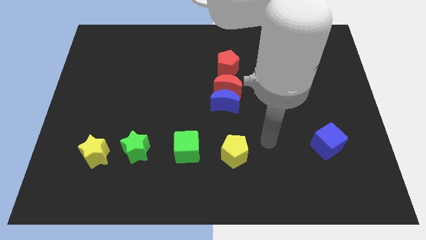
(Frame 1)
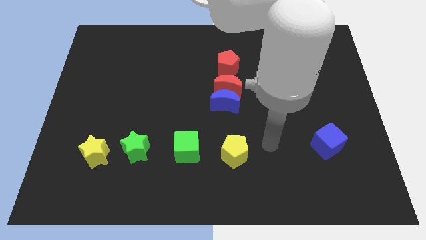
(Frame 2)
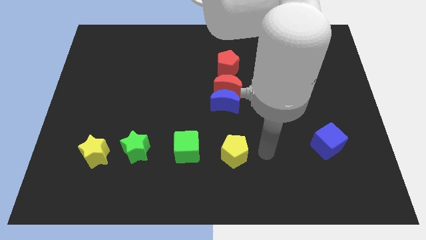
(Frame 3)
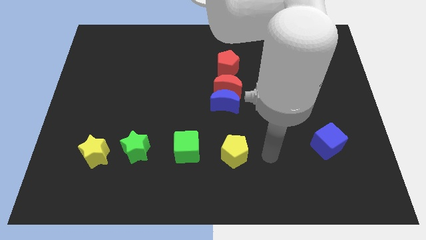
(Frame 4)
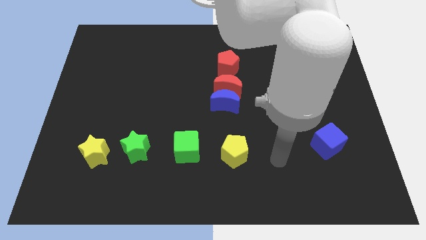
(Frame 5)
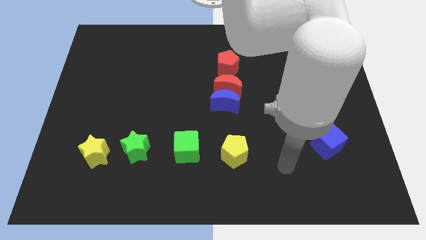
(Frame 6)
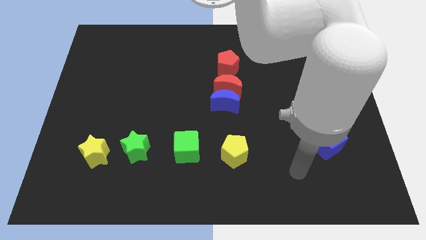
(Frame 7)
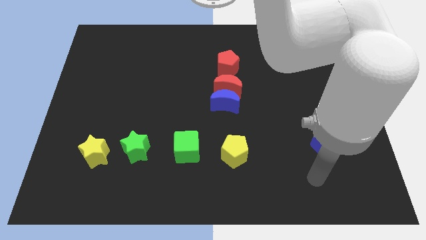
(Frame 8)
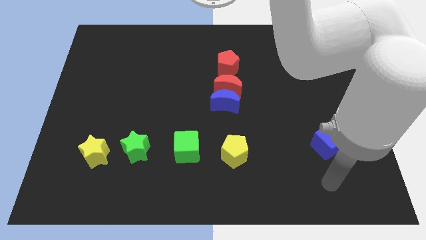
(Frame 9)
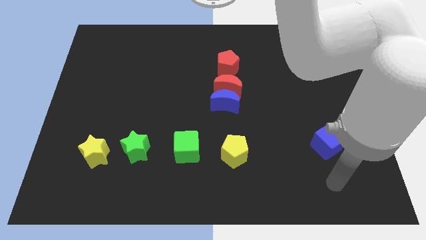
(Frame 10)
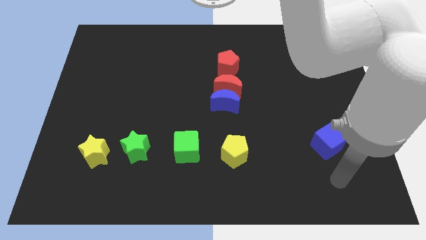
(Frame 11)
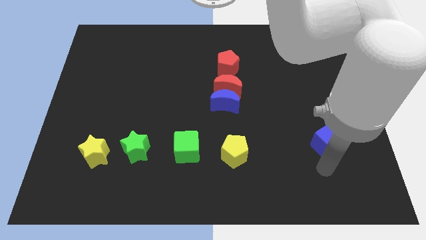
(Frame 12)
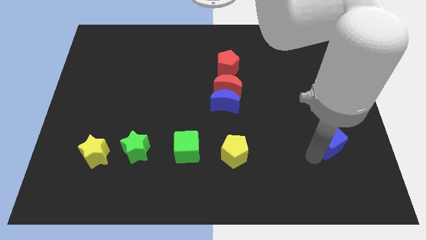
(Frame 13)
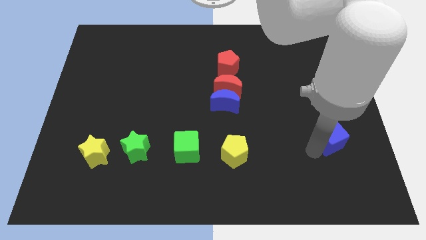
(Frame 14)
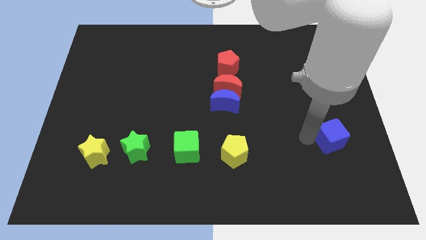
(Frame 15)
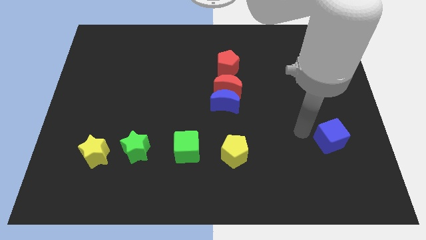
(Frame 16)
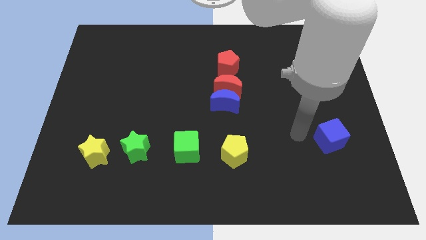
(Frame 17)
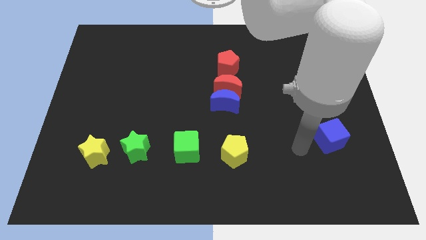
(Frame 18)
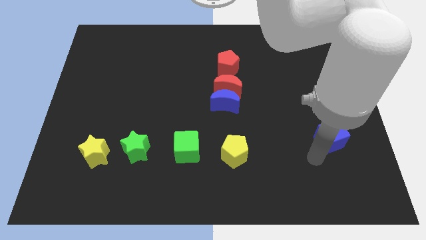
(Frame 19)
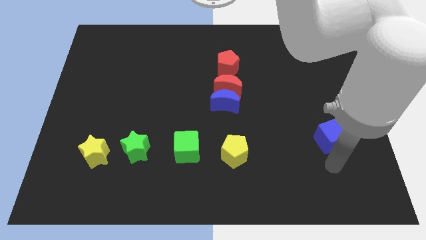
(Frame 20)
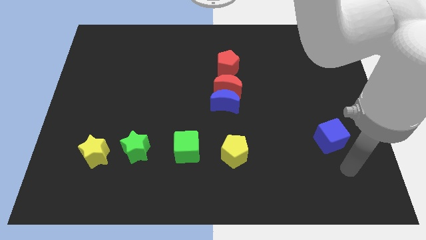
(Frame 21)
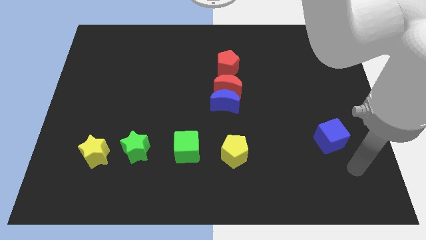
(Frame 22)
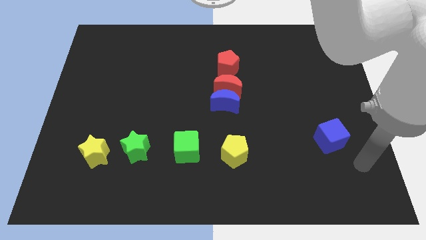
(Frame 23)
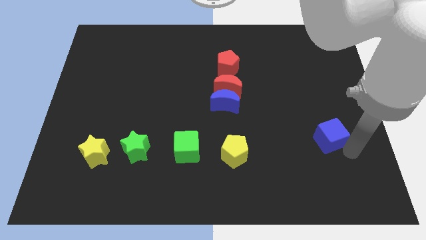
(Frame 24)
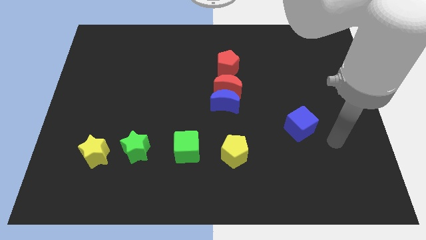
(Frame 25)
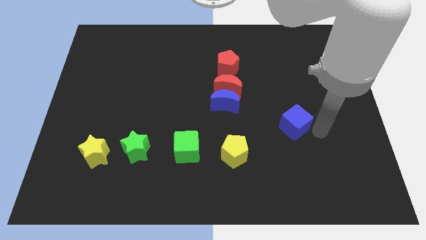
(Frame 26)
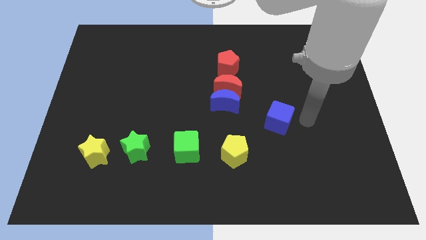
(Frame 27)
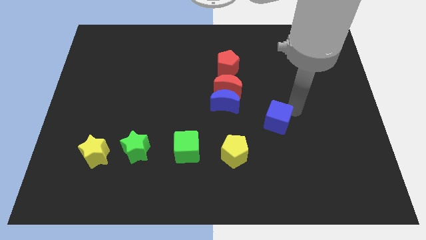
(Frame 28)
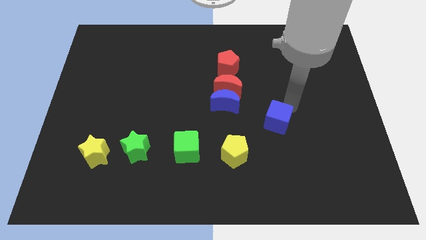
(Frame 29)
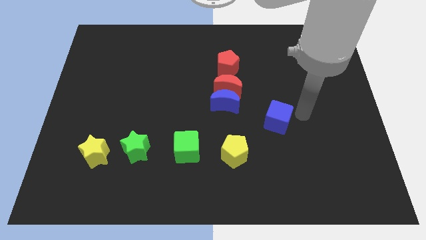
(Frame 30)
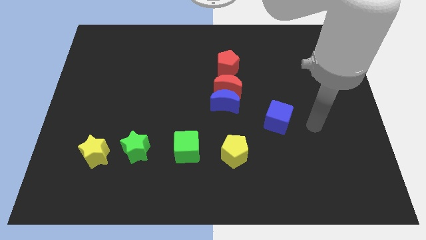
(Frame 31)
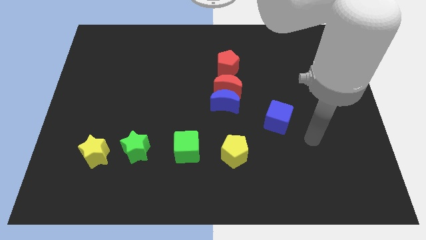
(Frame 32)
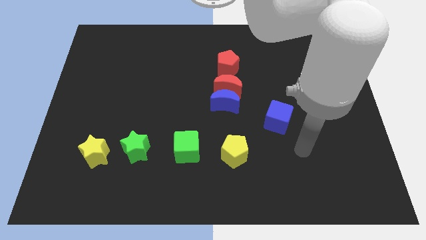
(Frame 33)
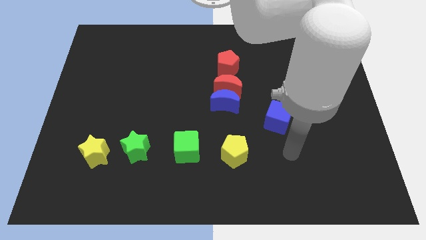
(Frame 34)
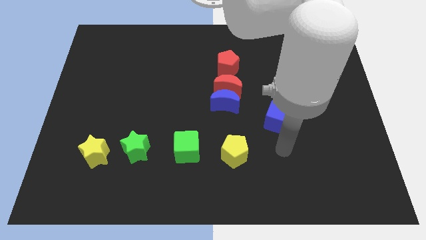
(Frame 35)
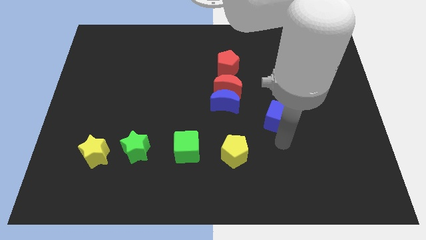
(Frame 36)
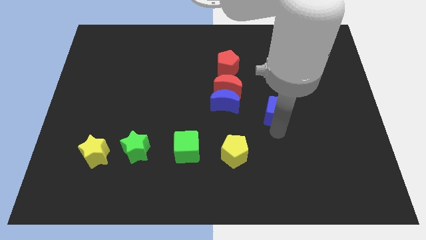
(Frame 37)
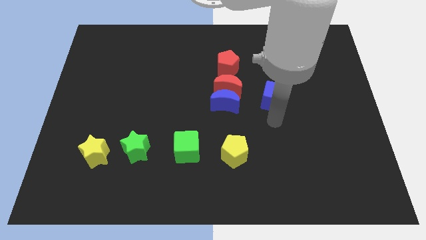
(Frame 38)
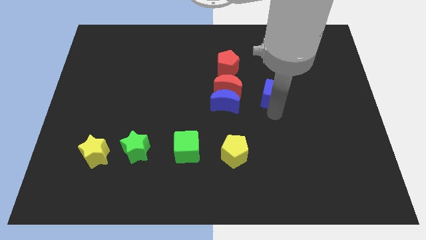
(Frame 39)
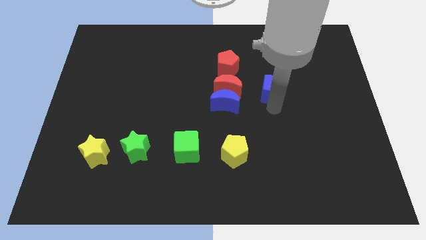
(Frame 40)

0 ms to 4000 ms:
move the blue cube right to the red crescent

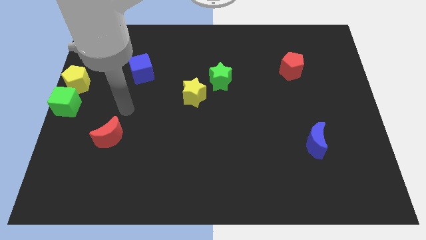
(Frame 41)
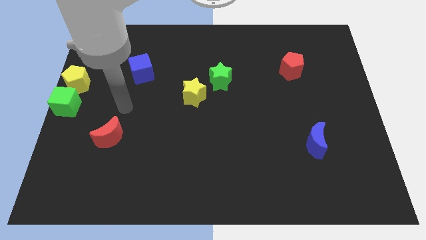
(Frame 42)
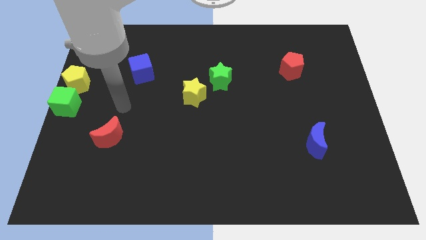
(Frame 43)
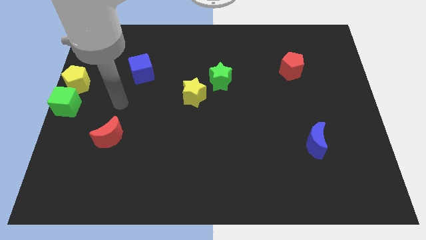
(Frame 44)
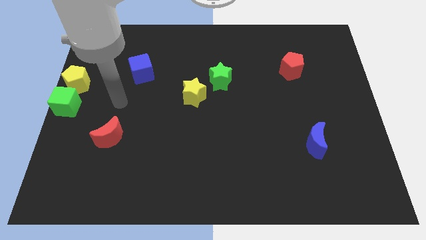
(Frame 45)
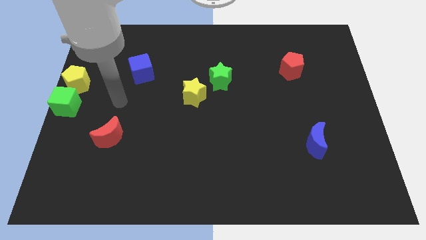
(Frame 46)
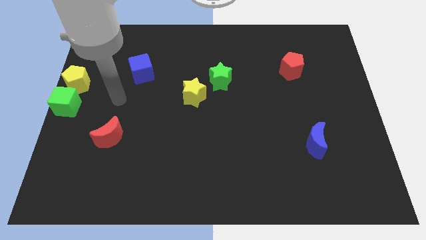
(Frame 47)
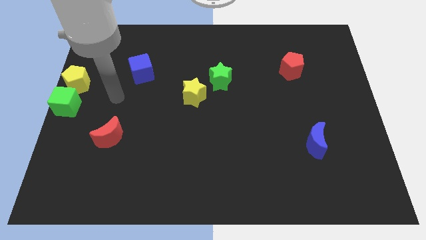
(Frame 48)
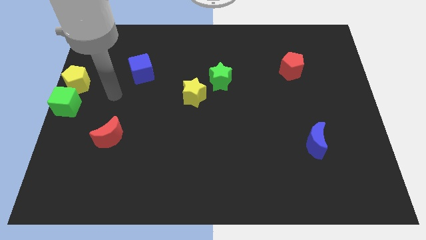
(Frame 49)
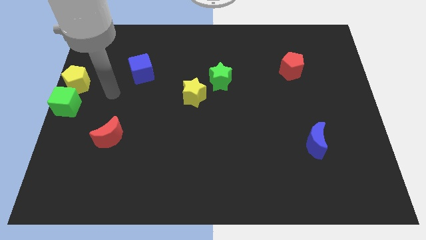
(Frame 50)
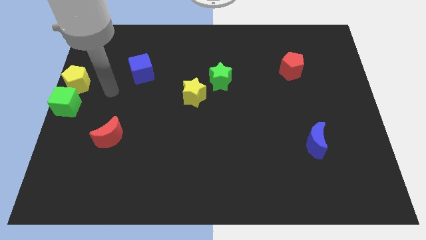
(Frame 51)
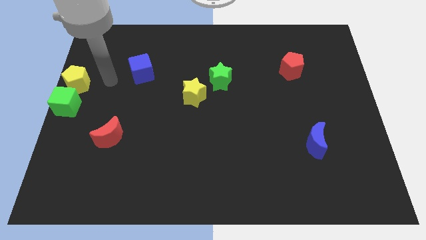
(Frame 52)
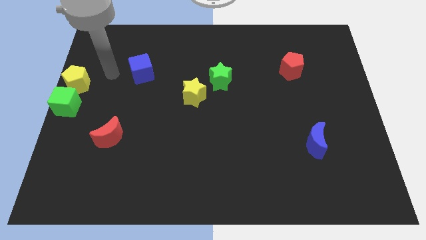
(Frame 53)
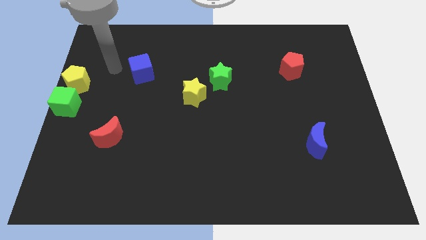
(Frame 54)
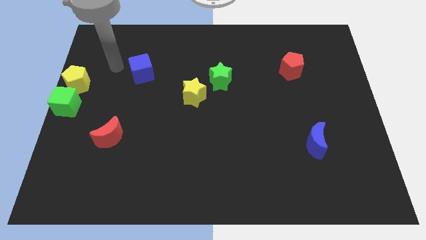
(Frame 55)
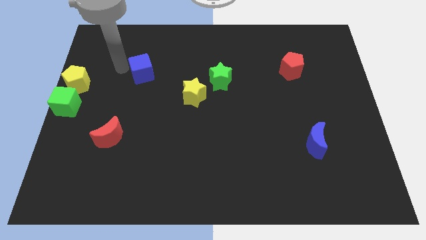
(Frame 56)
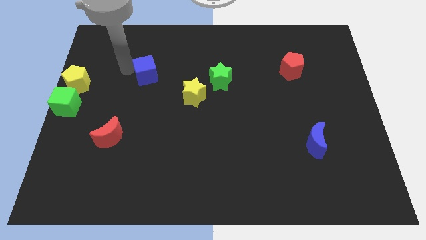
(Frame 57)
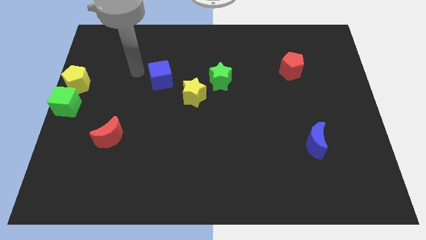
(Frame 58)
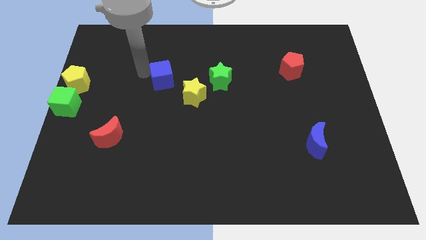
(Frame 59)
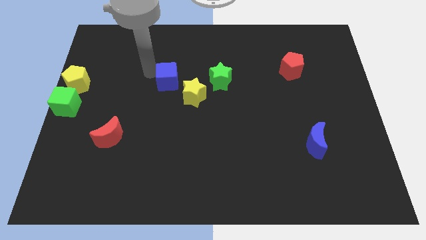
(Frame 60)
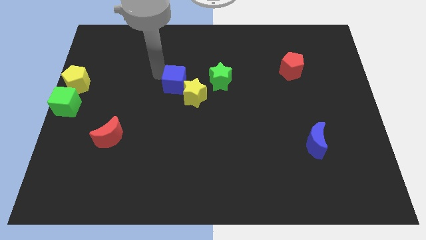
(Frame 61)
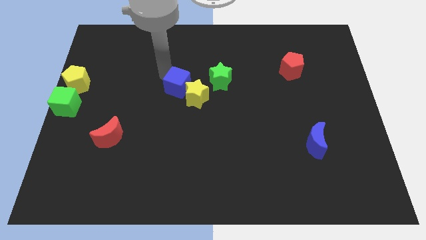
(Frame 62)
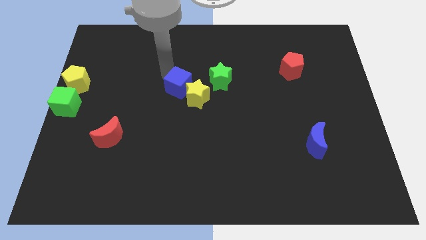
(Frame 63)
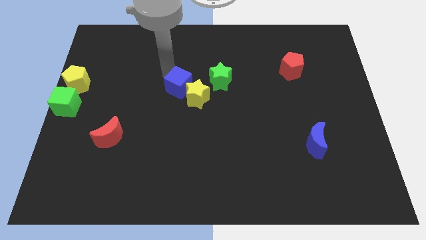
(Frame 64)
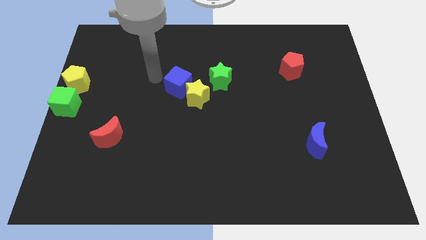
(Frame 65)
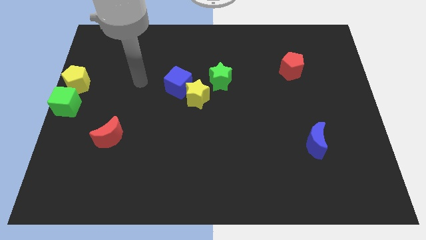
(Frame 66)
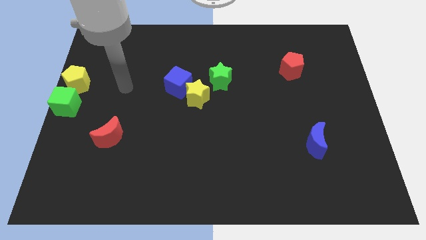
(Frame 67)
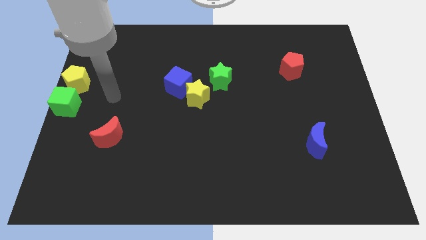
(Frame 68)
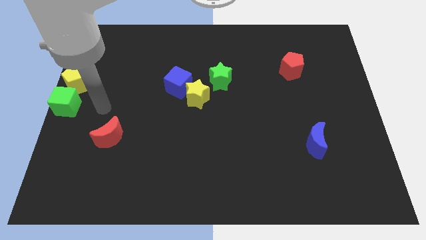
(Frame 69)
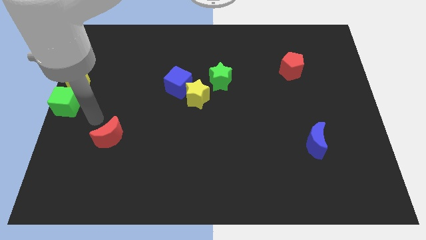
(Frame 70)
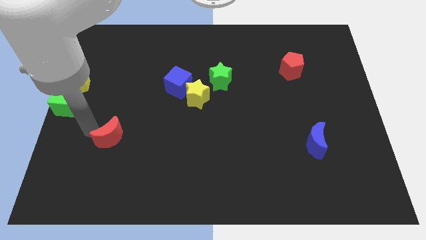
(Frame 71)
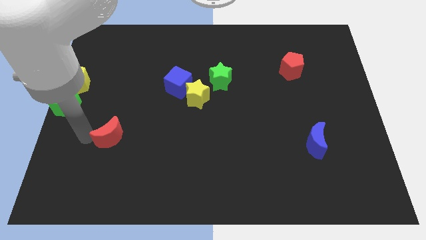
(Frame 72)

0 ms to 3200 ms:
move the blue cube to the left of the yellow star

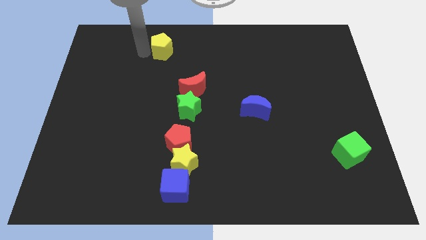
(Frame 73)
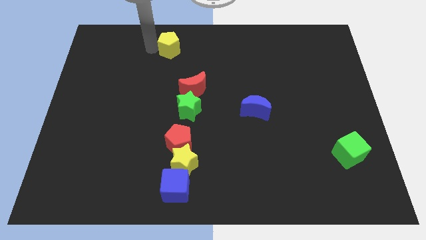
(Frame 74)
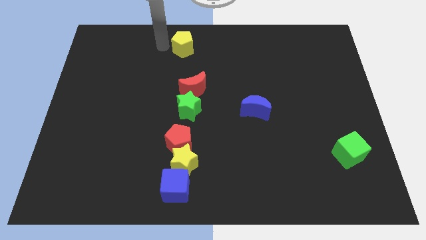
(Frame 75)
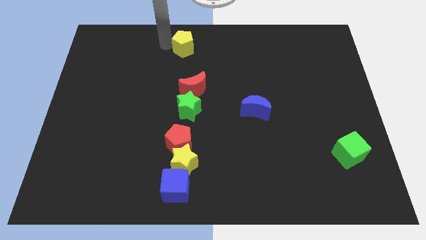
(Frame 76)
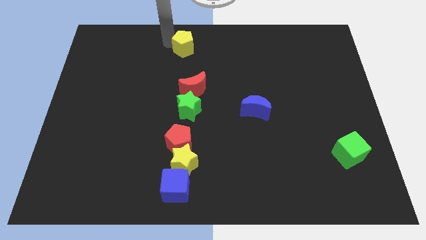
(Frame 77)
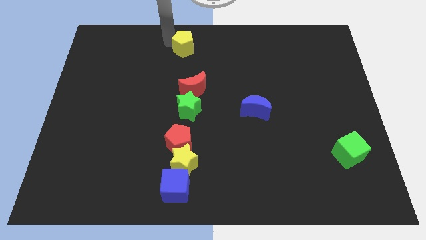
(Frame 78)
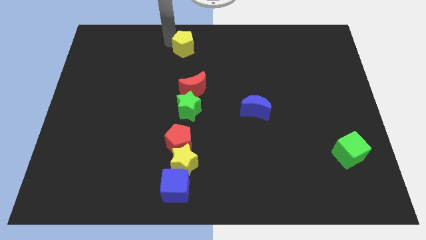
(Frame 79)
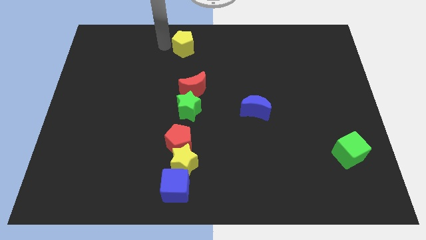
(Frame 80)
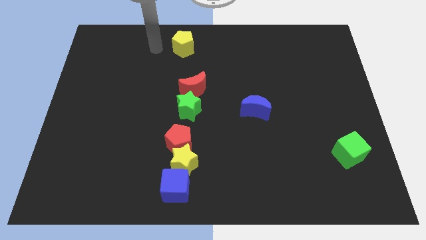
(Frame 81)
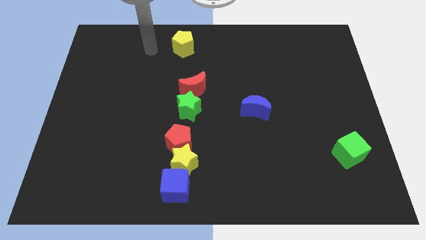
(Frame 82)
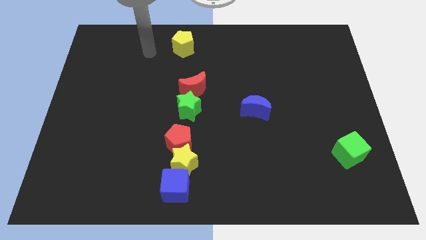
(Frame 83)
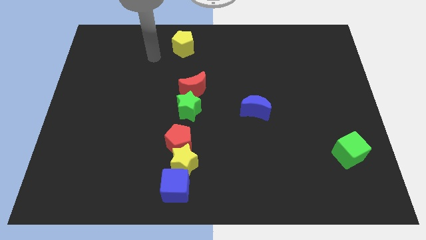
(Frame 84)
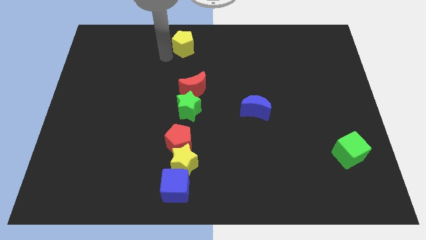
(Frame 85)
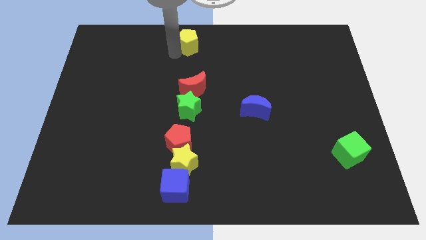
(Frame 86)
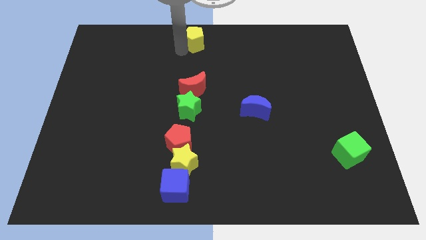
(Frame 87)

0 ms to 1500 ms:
place the yellow pentagon on top of the red crescent

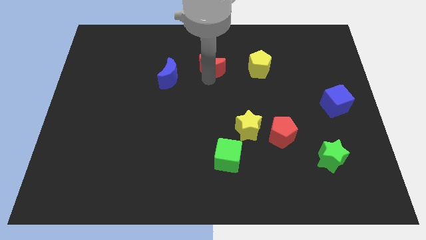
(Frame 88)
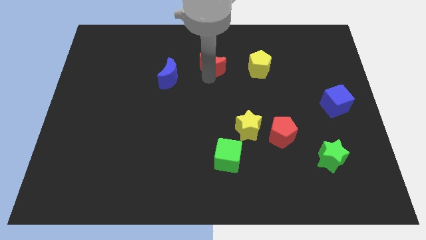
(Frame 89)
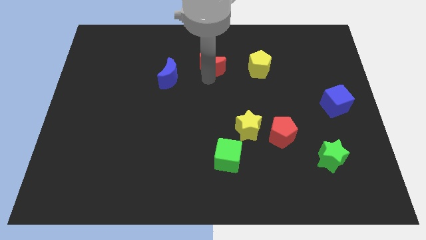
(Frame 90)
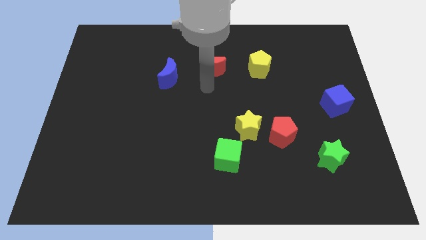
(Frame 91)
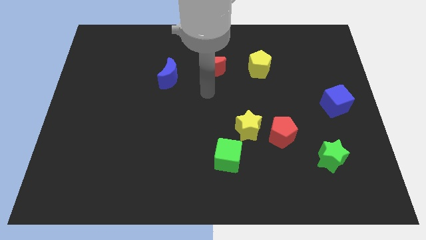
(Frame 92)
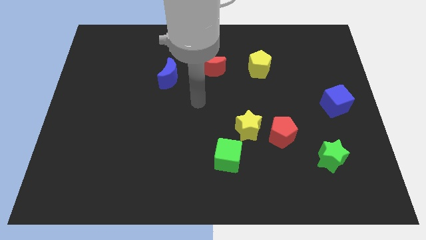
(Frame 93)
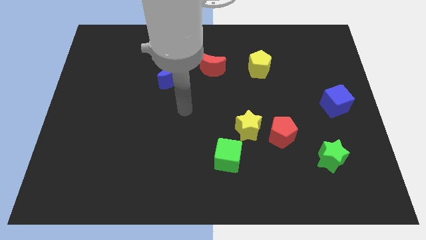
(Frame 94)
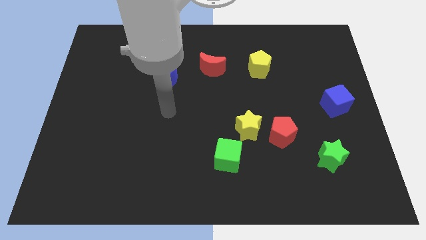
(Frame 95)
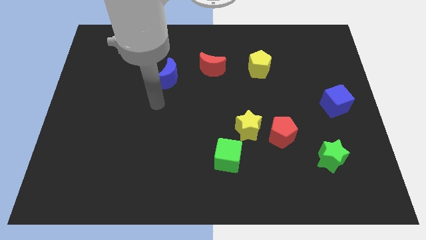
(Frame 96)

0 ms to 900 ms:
place the arm below the blue crescent
